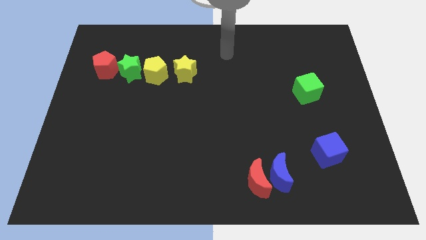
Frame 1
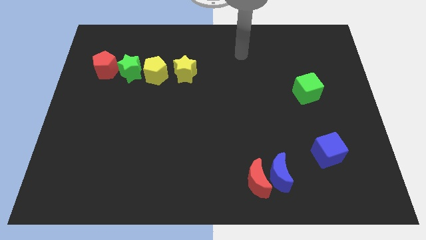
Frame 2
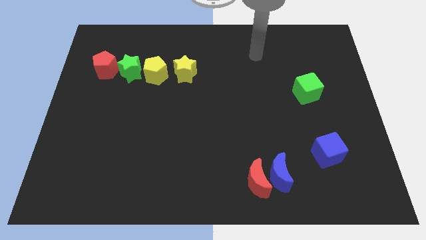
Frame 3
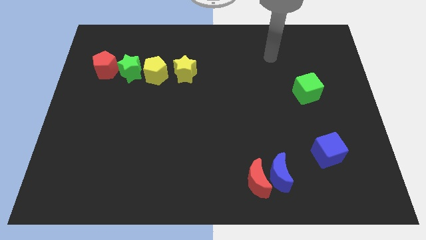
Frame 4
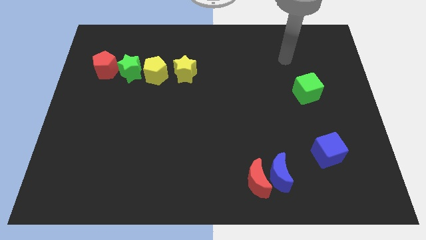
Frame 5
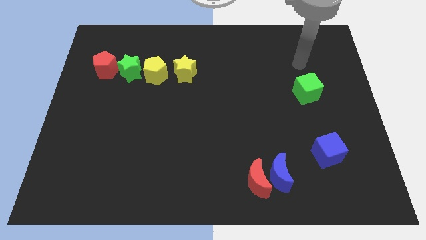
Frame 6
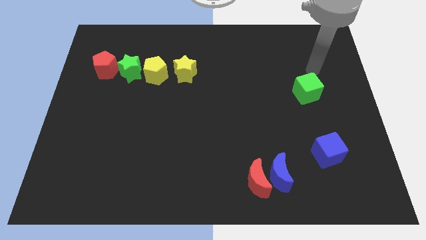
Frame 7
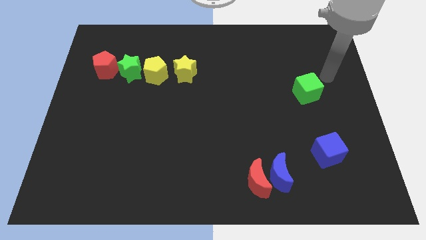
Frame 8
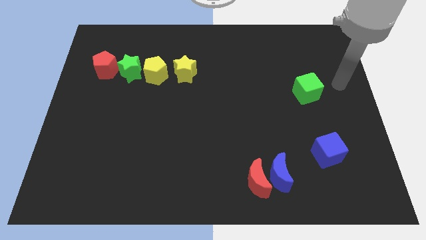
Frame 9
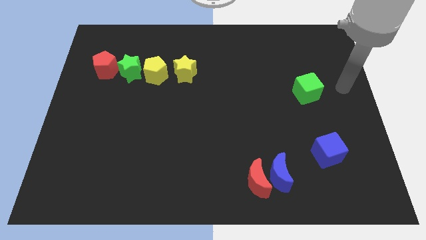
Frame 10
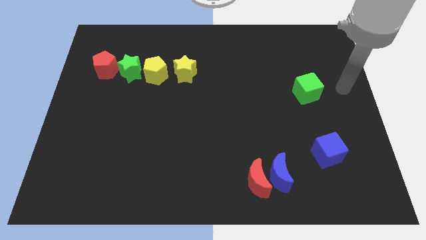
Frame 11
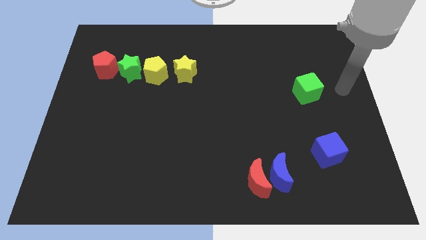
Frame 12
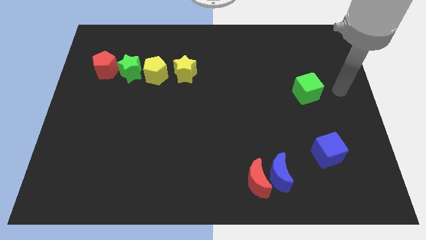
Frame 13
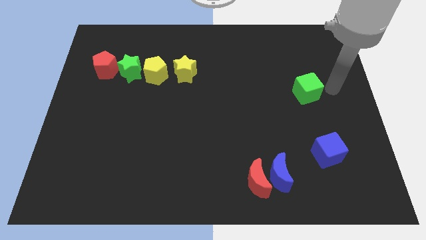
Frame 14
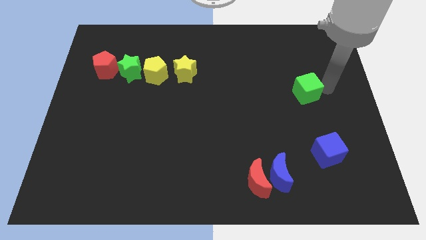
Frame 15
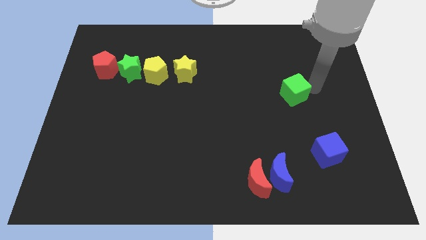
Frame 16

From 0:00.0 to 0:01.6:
go to the right side of the green cube

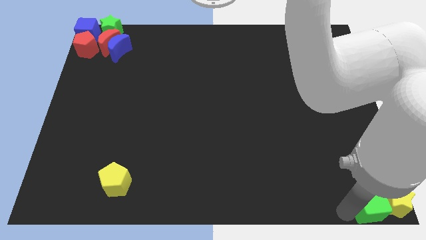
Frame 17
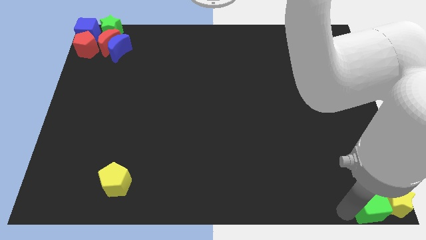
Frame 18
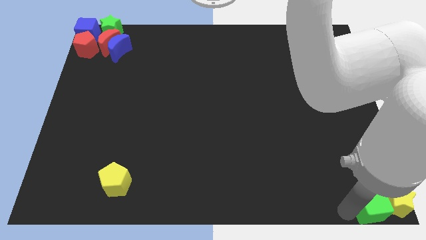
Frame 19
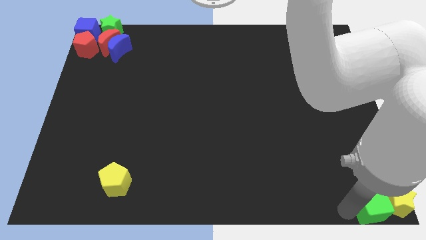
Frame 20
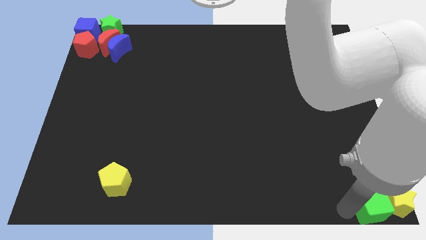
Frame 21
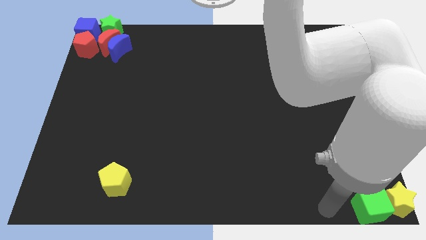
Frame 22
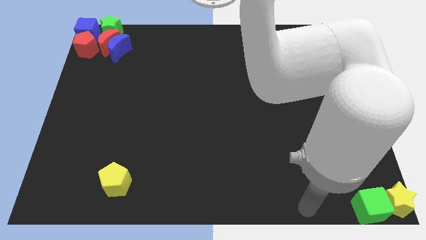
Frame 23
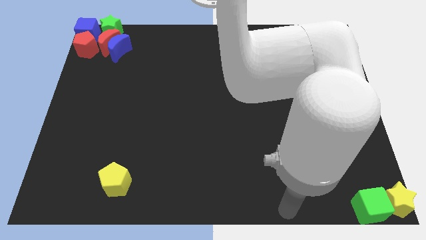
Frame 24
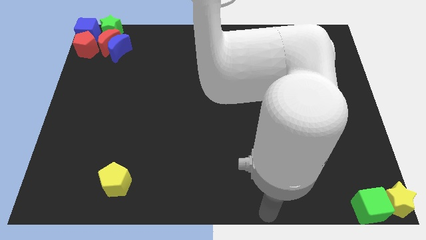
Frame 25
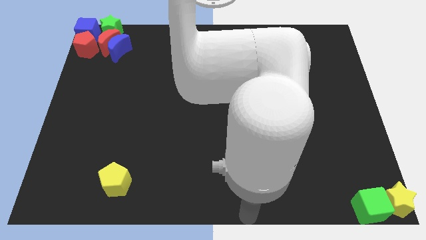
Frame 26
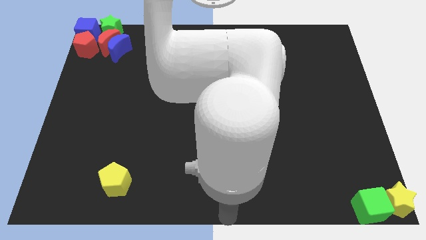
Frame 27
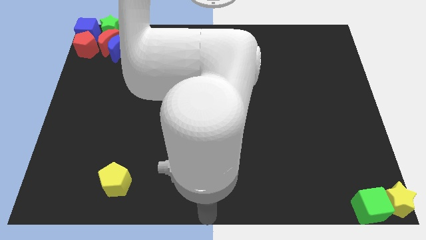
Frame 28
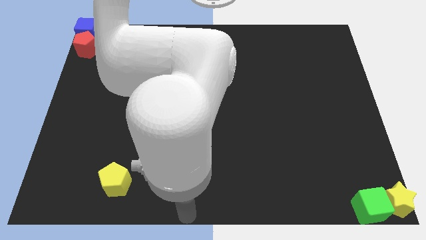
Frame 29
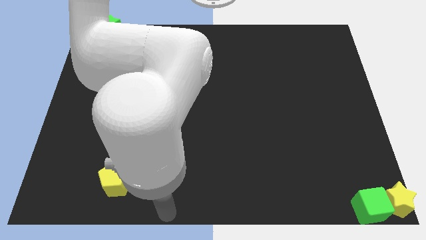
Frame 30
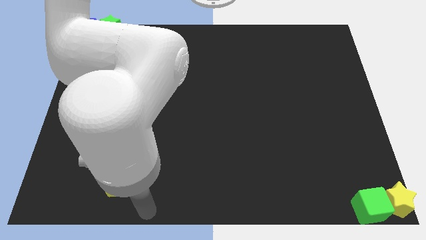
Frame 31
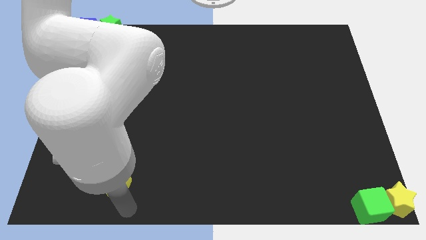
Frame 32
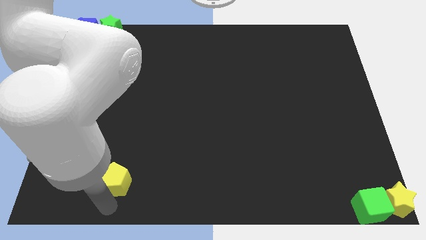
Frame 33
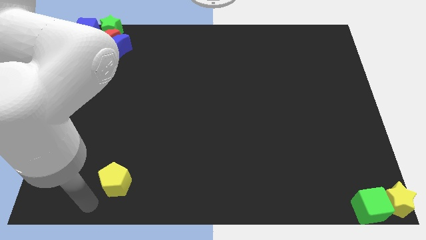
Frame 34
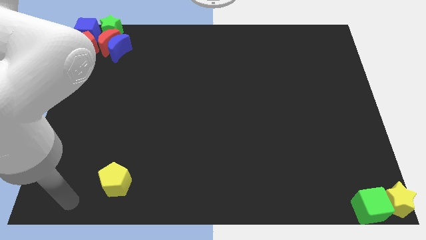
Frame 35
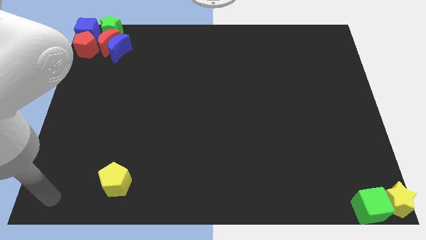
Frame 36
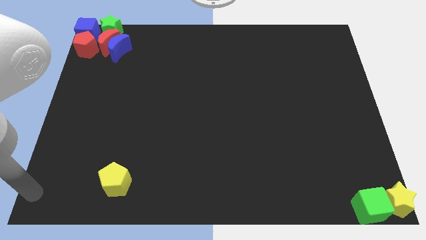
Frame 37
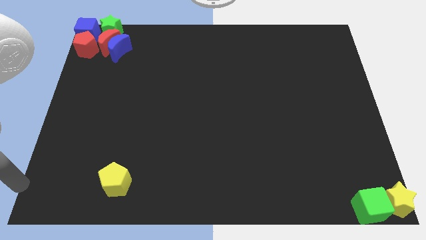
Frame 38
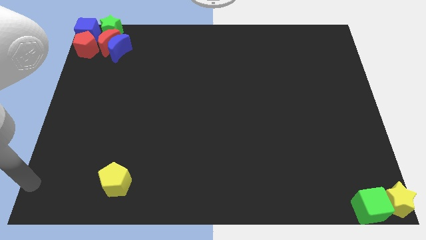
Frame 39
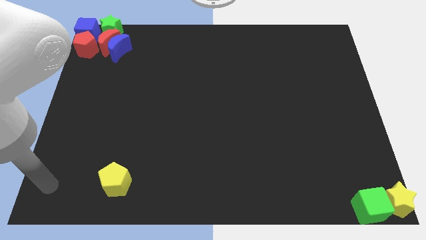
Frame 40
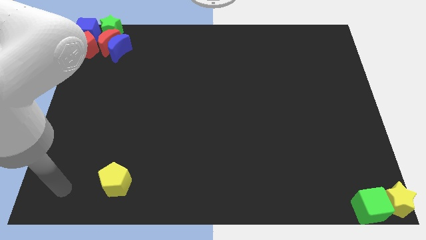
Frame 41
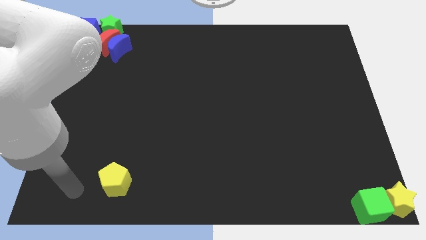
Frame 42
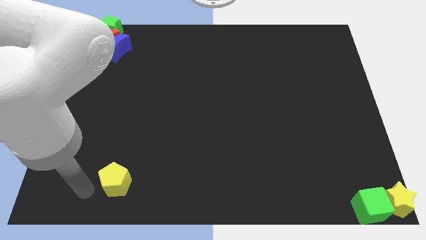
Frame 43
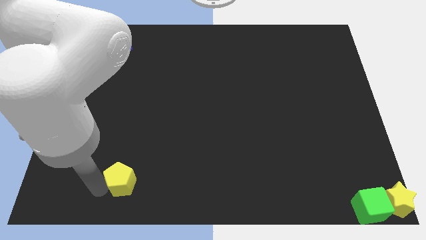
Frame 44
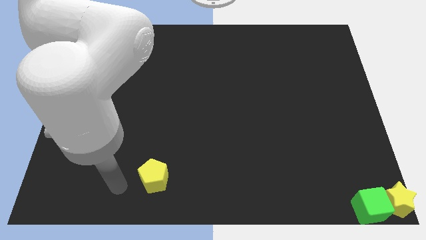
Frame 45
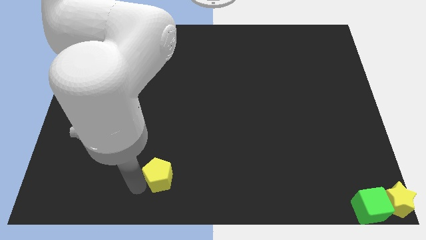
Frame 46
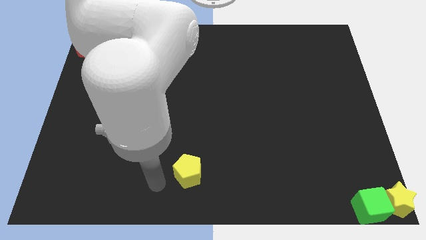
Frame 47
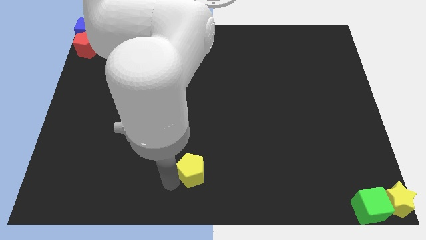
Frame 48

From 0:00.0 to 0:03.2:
push the yellow pentagon towards the bottom center

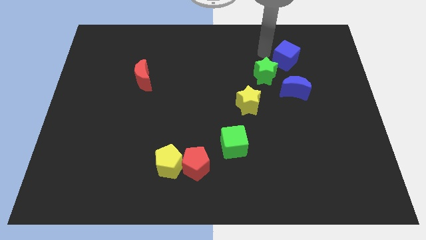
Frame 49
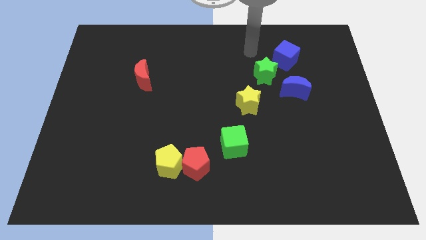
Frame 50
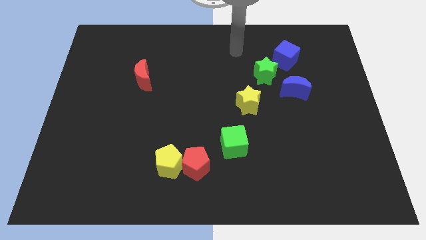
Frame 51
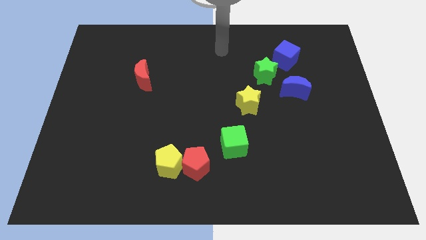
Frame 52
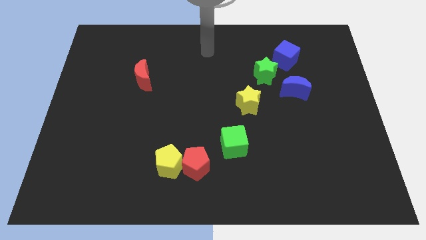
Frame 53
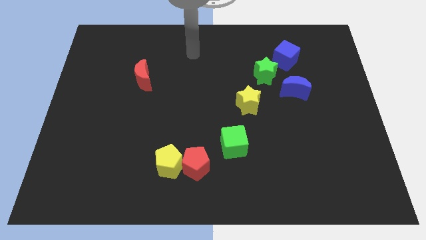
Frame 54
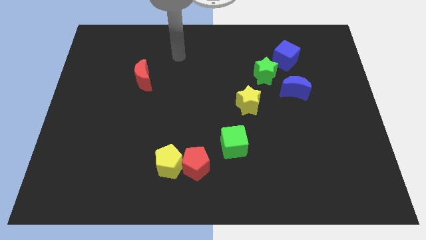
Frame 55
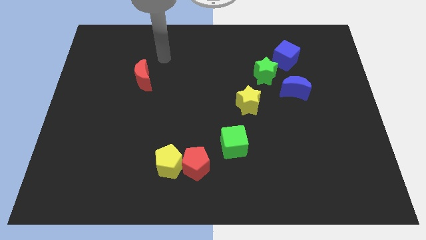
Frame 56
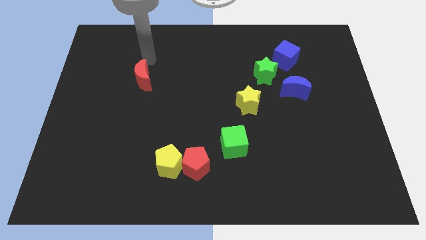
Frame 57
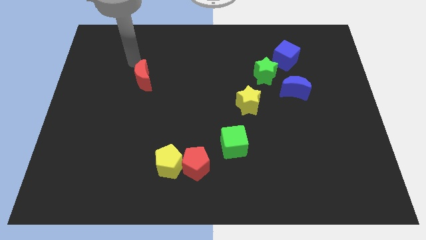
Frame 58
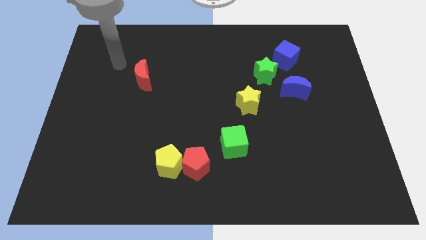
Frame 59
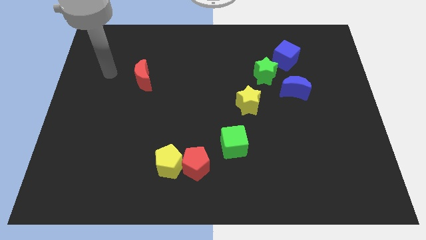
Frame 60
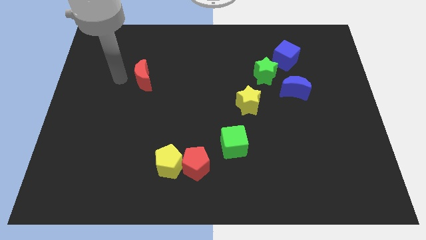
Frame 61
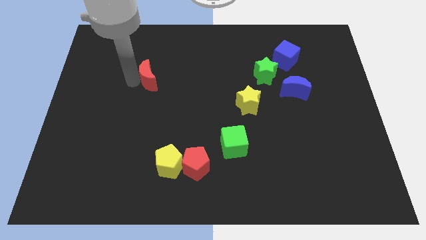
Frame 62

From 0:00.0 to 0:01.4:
point your arm at the left side of the red crescent

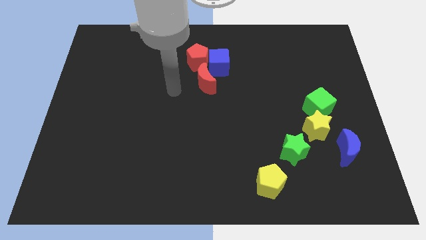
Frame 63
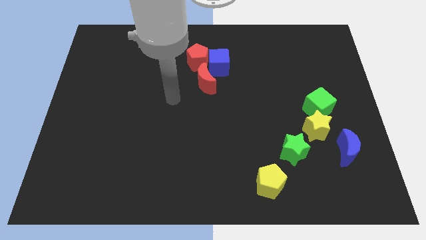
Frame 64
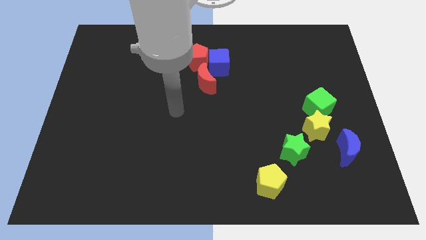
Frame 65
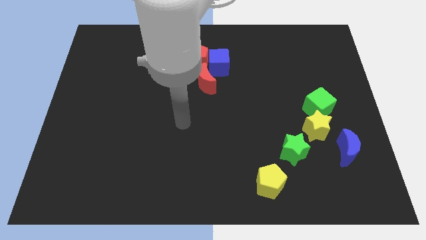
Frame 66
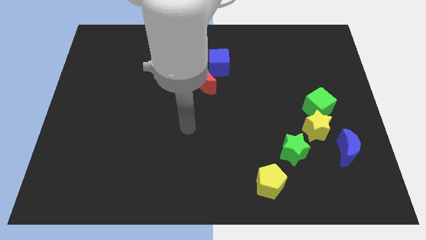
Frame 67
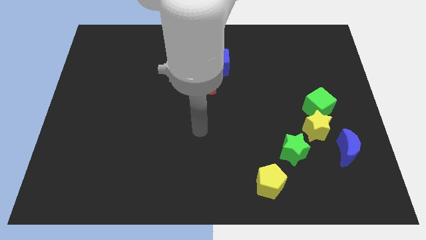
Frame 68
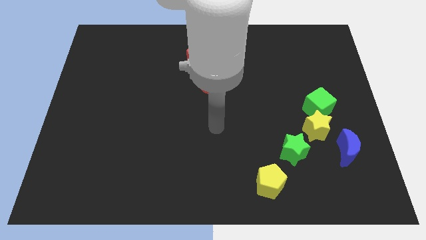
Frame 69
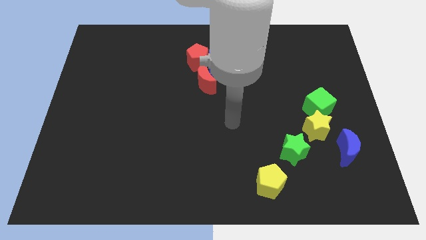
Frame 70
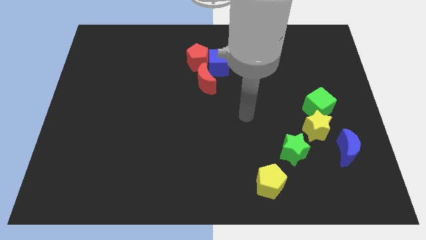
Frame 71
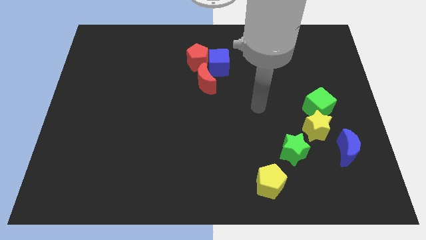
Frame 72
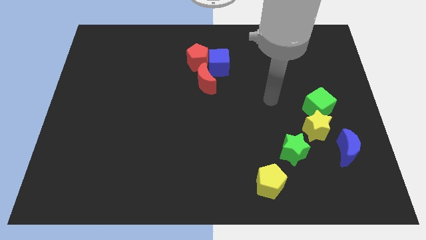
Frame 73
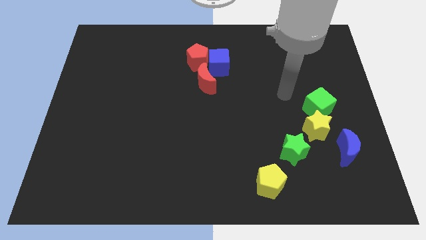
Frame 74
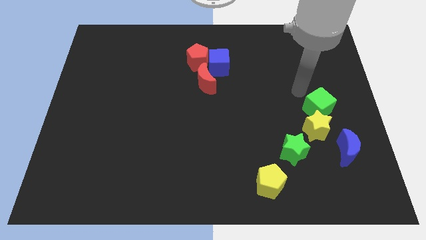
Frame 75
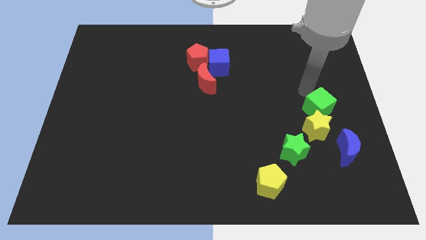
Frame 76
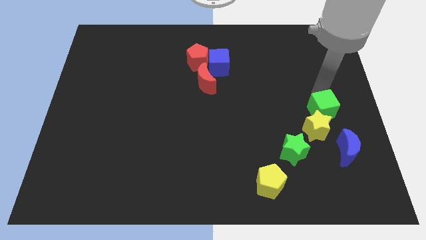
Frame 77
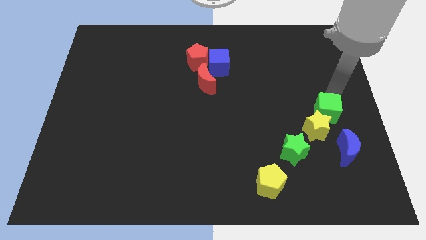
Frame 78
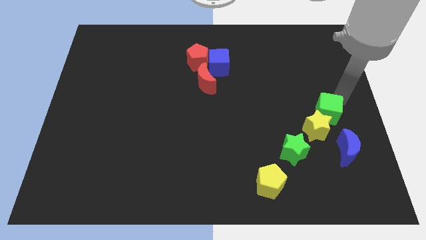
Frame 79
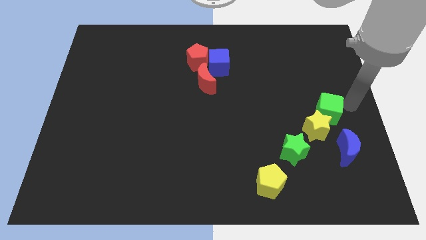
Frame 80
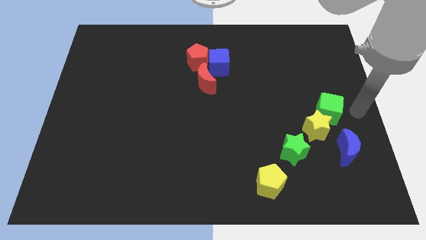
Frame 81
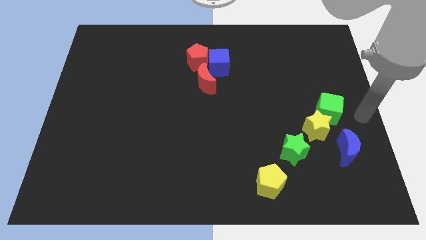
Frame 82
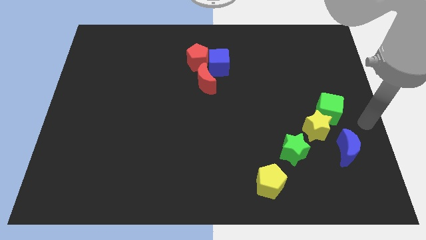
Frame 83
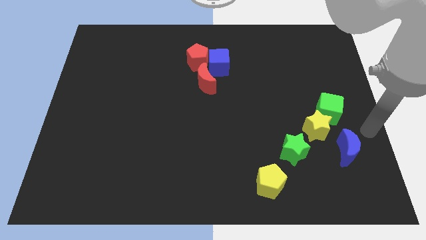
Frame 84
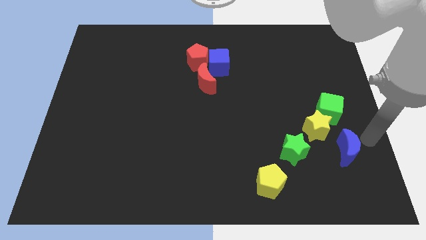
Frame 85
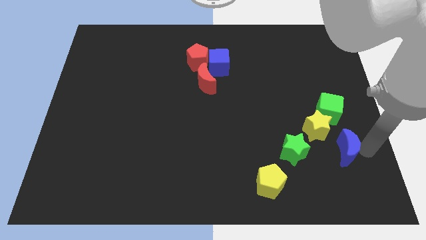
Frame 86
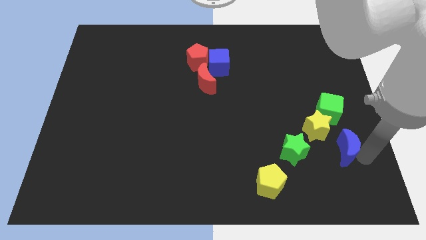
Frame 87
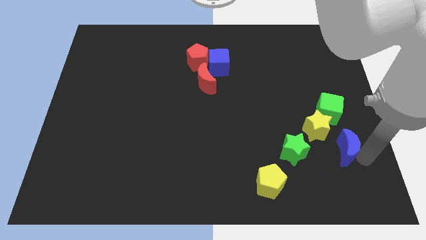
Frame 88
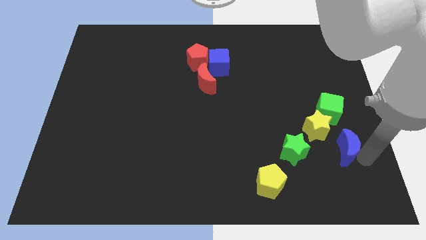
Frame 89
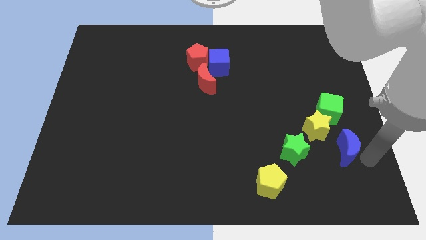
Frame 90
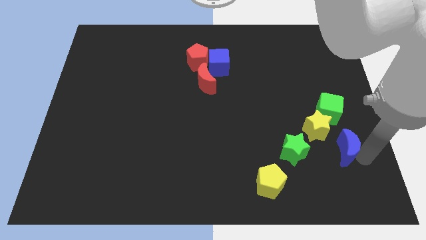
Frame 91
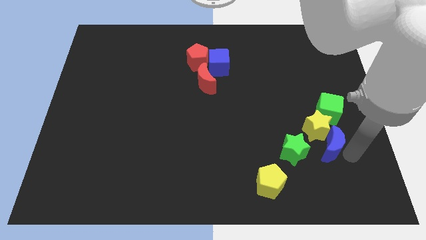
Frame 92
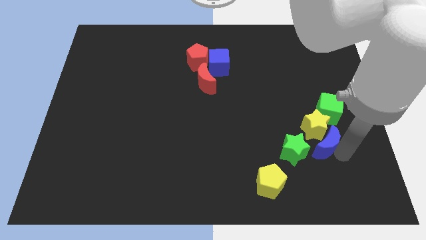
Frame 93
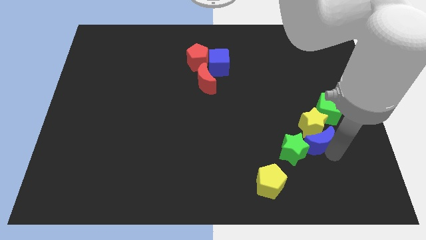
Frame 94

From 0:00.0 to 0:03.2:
push the blue moon into the yellow star
